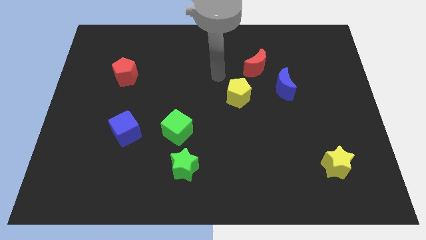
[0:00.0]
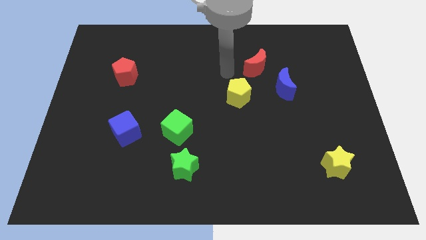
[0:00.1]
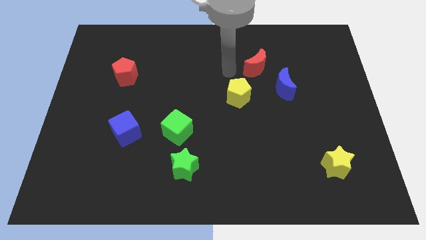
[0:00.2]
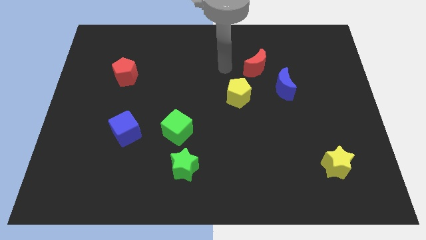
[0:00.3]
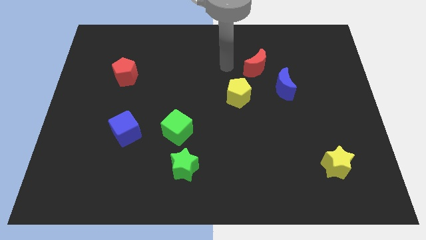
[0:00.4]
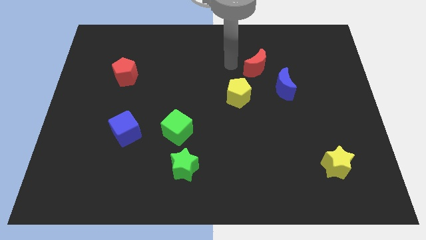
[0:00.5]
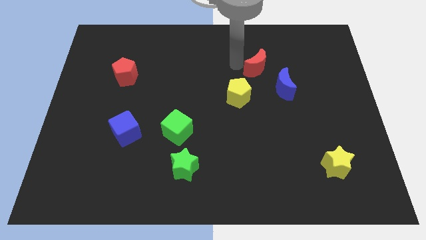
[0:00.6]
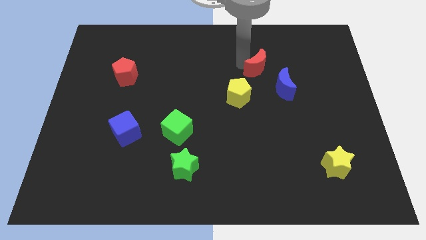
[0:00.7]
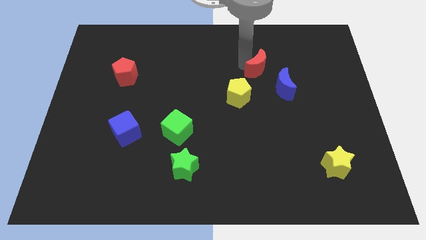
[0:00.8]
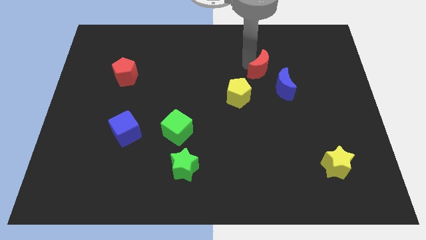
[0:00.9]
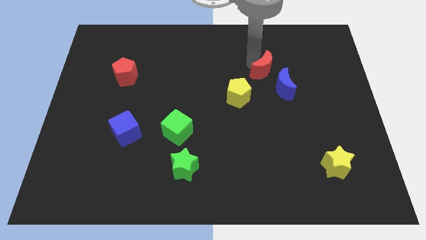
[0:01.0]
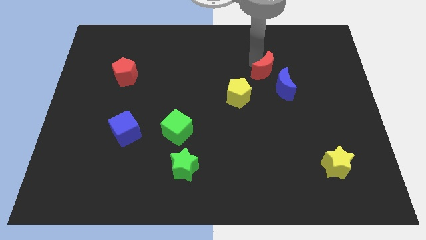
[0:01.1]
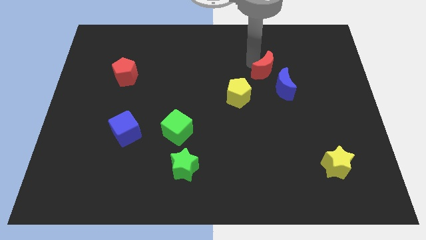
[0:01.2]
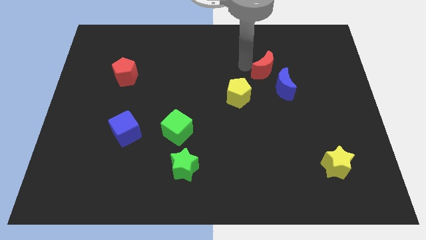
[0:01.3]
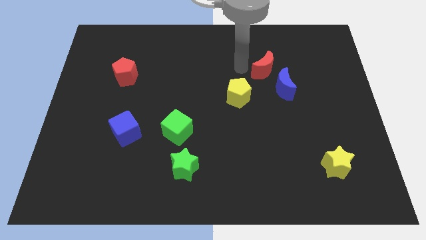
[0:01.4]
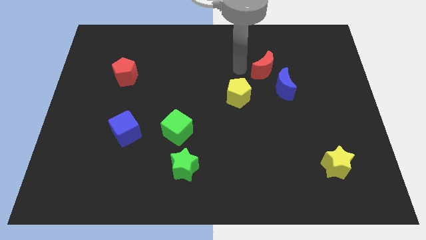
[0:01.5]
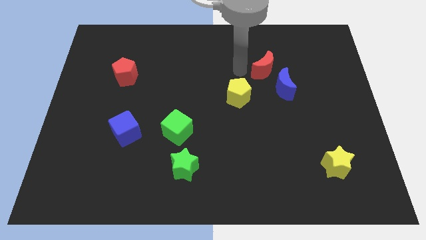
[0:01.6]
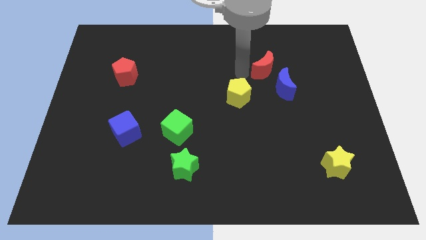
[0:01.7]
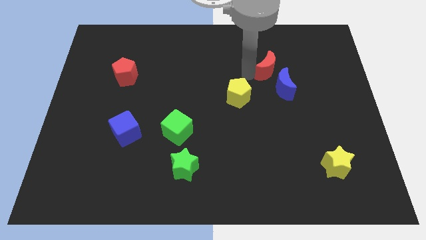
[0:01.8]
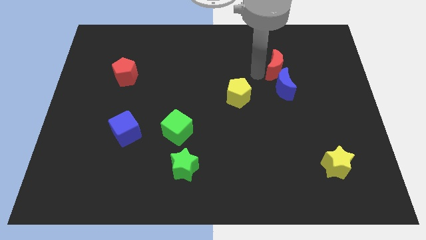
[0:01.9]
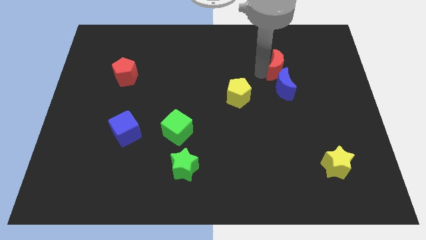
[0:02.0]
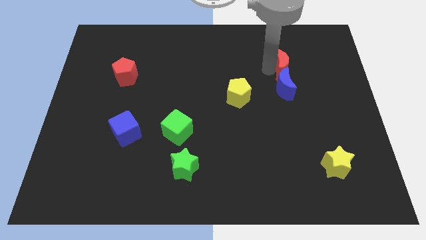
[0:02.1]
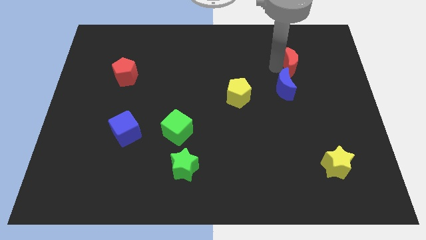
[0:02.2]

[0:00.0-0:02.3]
push the red crescent to the top of the blue crescent

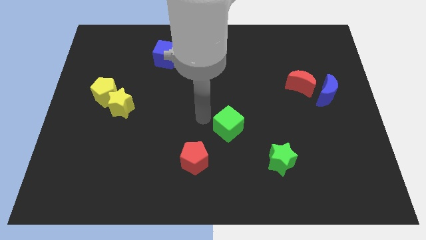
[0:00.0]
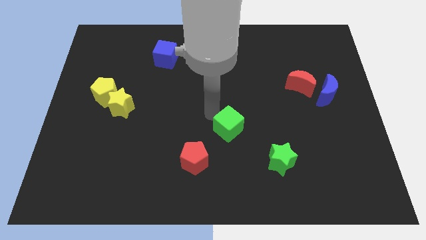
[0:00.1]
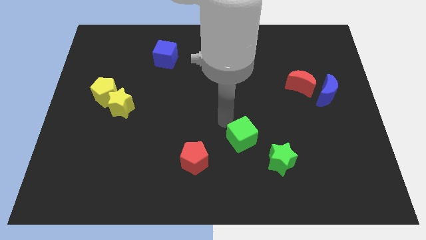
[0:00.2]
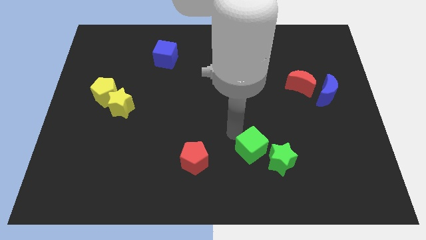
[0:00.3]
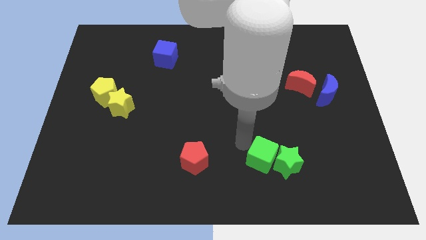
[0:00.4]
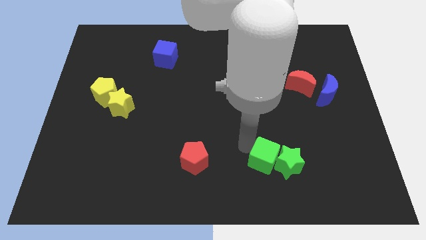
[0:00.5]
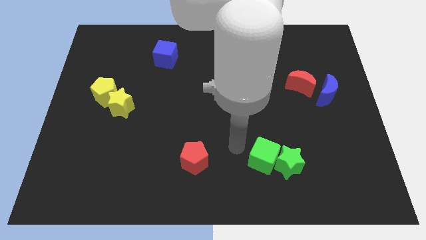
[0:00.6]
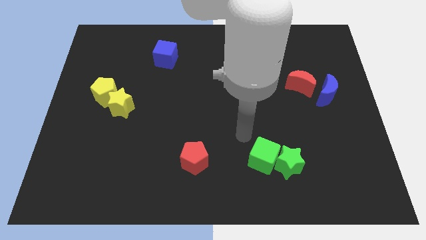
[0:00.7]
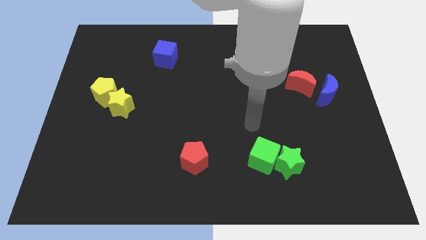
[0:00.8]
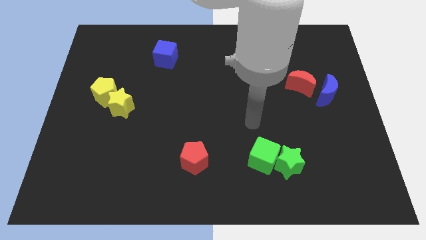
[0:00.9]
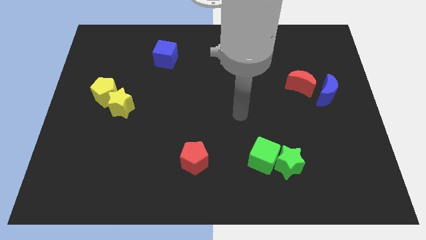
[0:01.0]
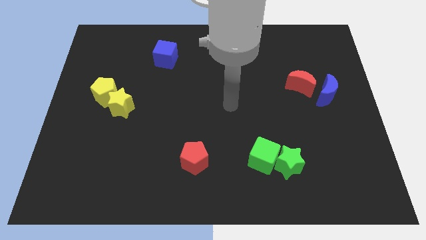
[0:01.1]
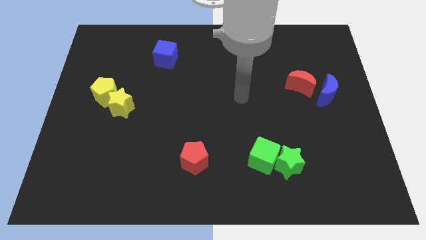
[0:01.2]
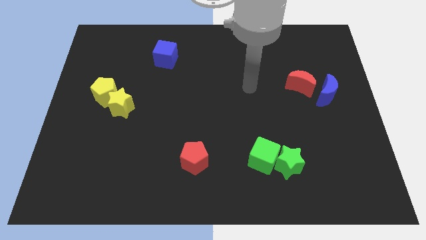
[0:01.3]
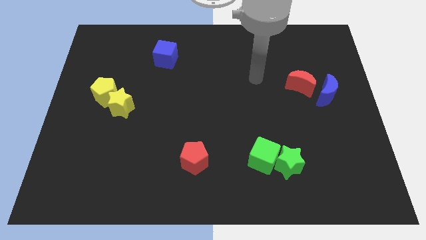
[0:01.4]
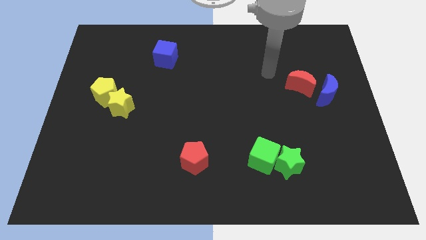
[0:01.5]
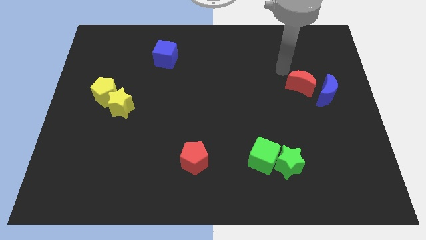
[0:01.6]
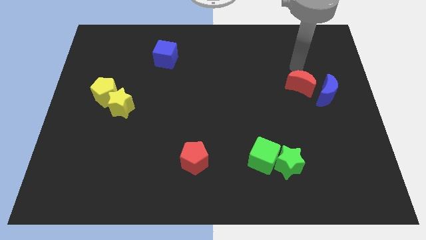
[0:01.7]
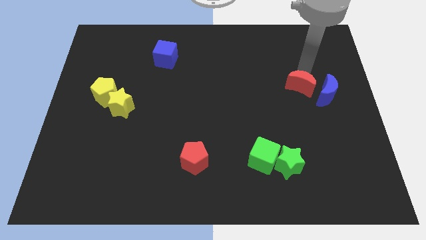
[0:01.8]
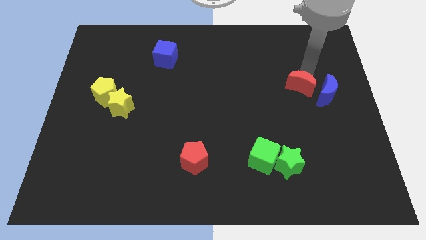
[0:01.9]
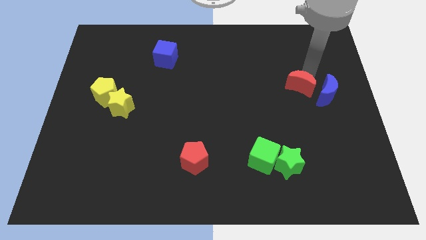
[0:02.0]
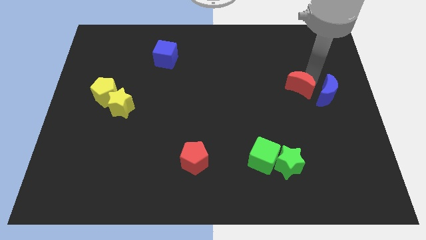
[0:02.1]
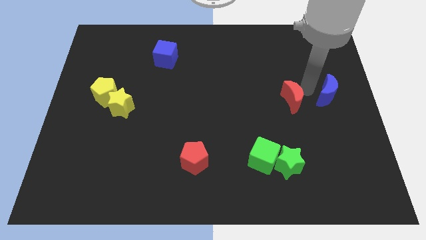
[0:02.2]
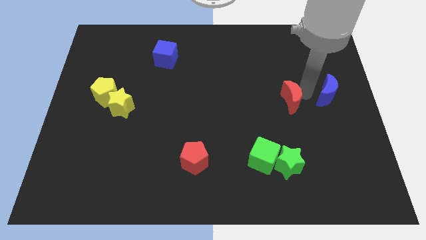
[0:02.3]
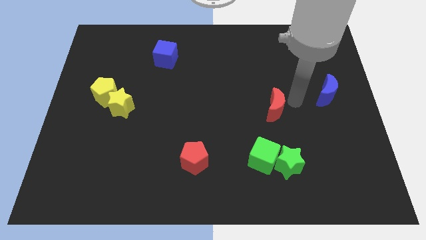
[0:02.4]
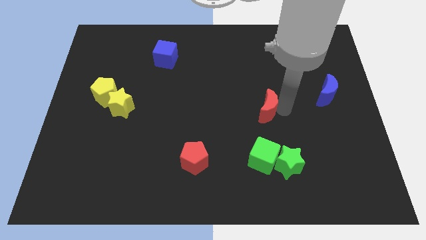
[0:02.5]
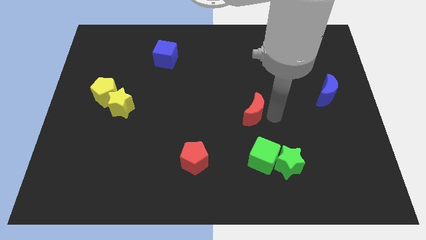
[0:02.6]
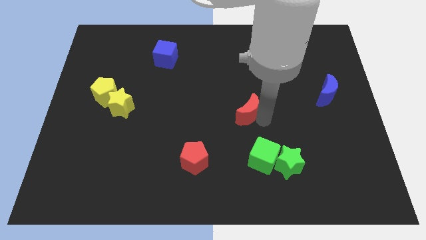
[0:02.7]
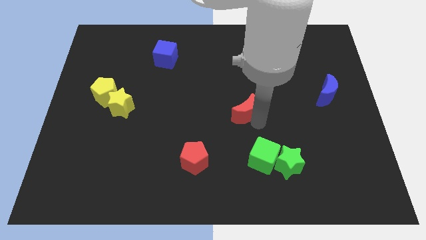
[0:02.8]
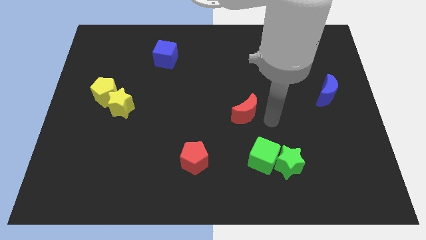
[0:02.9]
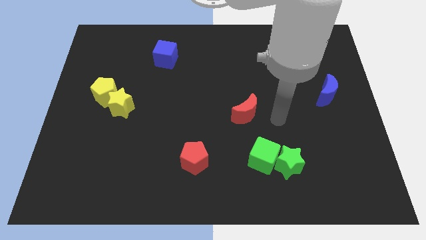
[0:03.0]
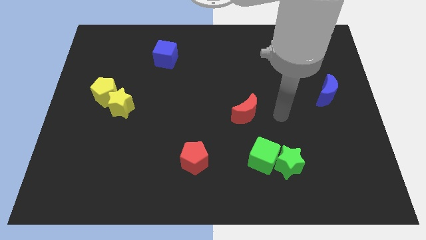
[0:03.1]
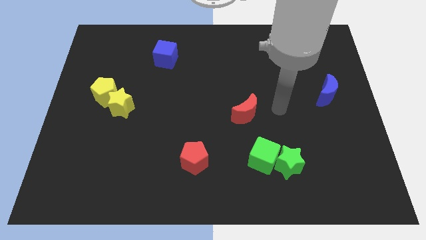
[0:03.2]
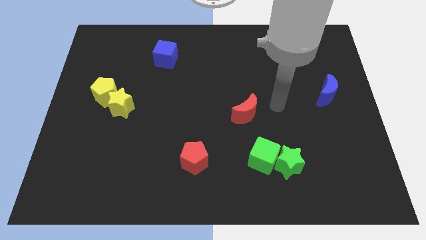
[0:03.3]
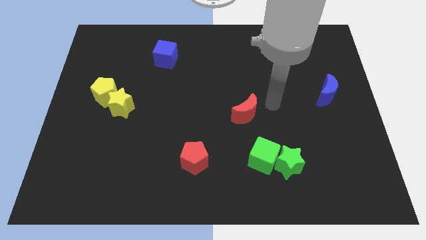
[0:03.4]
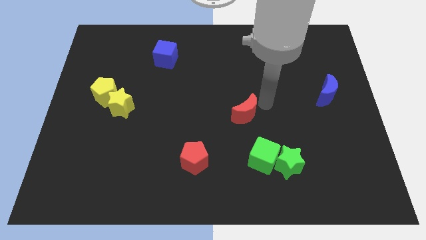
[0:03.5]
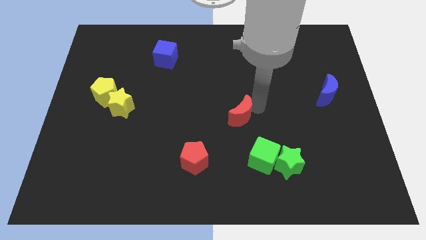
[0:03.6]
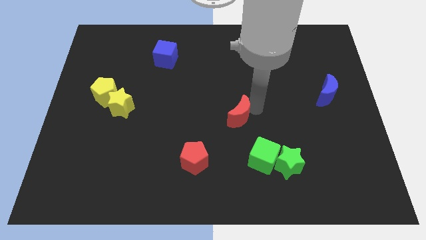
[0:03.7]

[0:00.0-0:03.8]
push red crescent slightly towards red pentagon

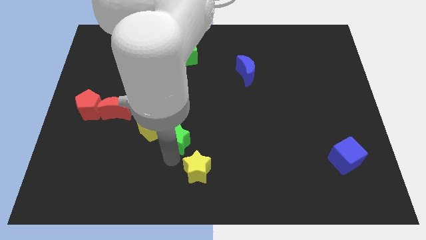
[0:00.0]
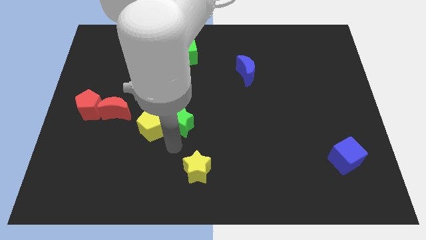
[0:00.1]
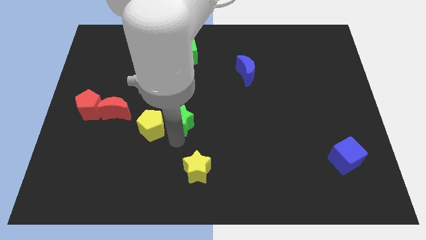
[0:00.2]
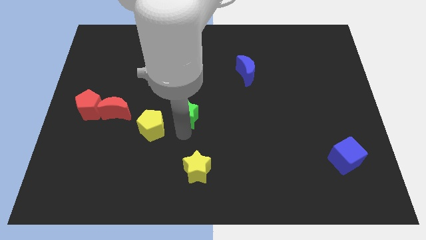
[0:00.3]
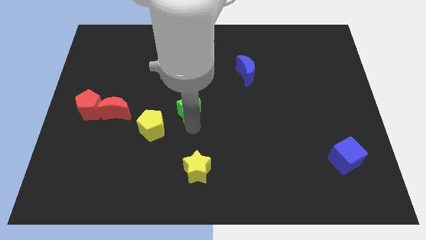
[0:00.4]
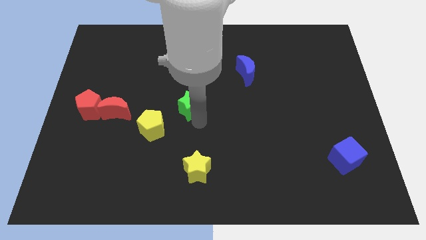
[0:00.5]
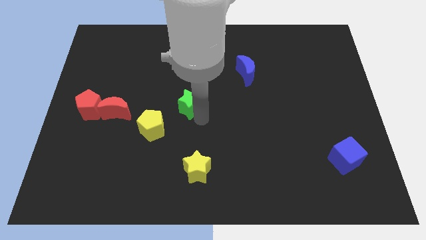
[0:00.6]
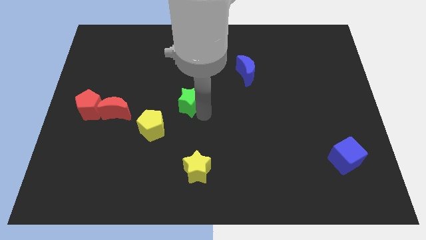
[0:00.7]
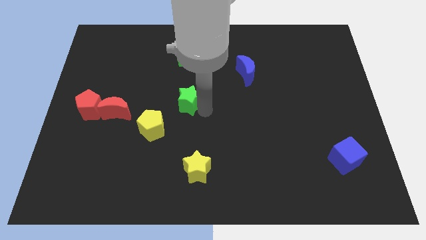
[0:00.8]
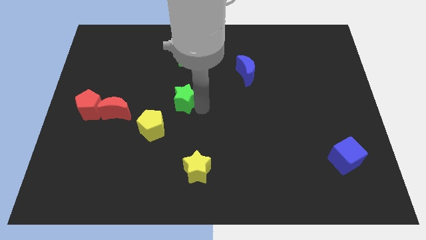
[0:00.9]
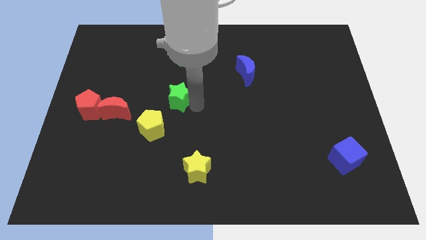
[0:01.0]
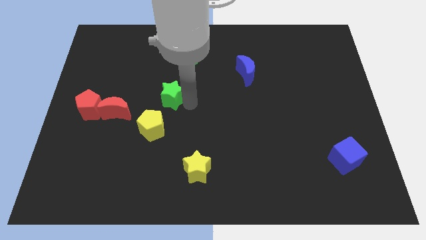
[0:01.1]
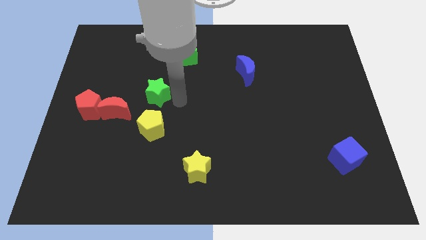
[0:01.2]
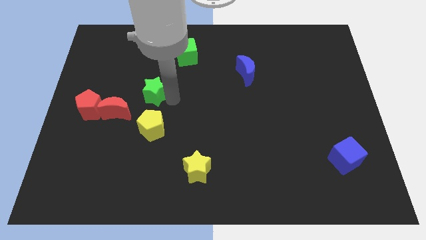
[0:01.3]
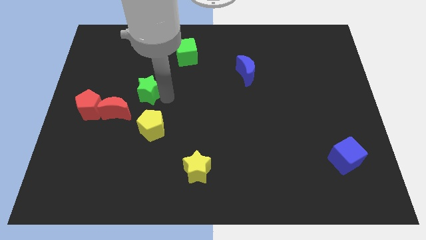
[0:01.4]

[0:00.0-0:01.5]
move the green star towards top

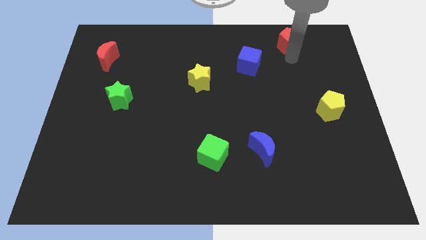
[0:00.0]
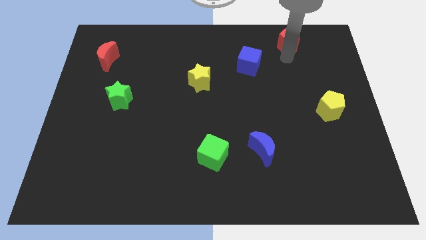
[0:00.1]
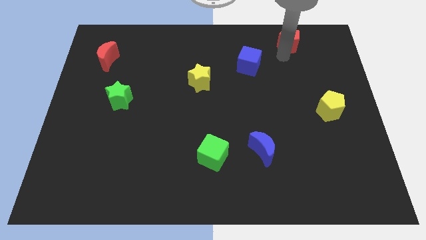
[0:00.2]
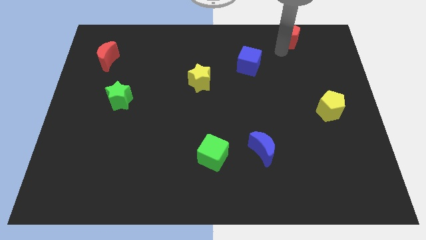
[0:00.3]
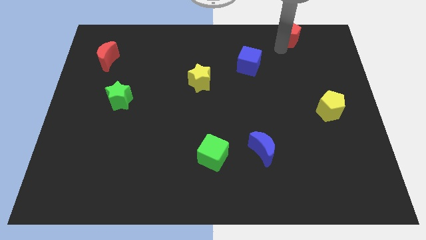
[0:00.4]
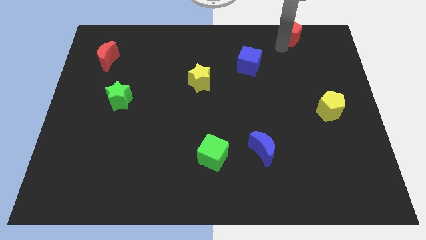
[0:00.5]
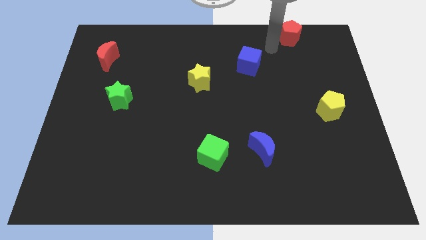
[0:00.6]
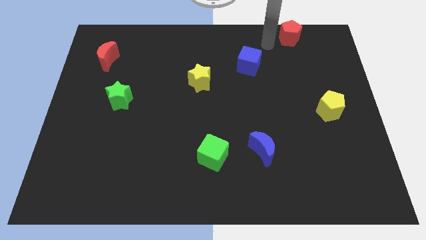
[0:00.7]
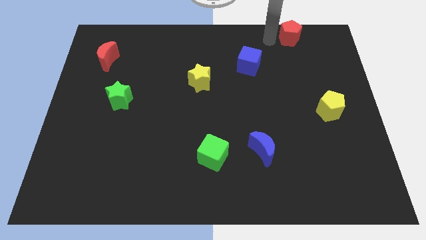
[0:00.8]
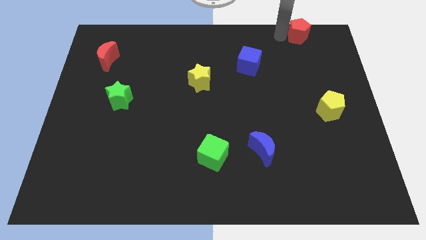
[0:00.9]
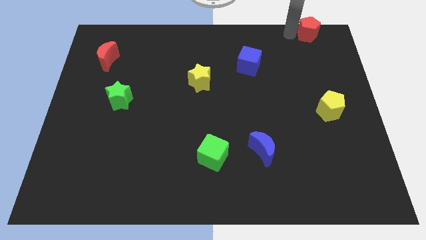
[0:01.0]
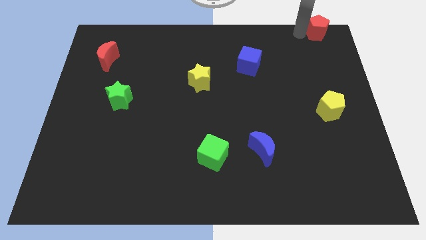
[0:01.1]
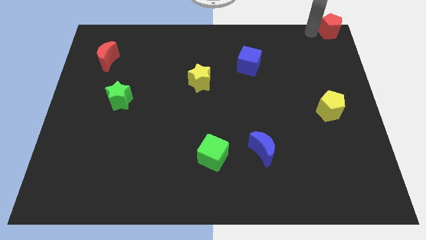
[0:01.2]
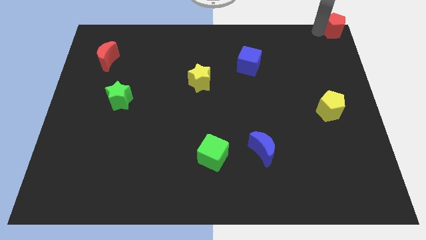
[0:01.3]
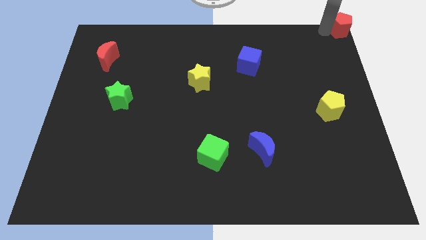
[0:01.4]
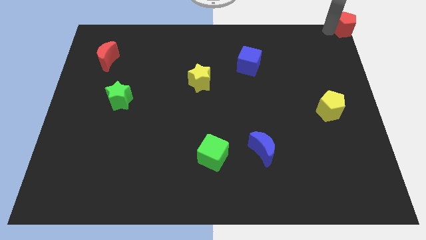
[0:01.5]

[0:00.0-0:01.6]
move the red pentagon to the top right
